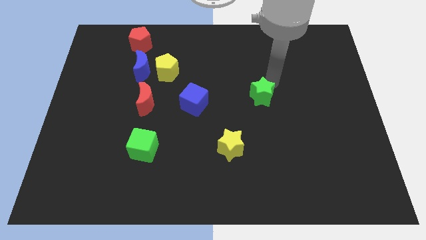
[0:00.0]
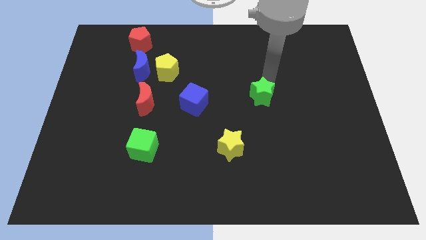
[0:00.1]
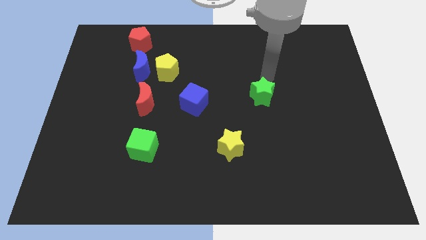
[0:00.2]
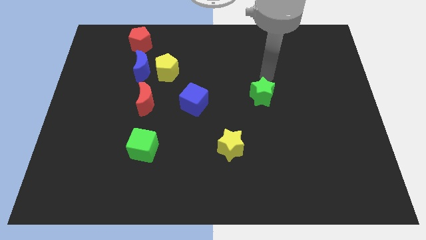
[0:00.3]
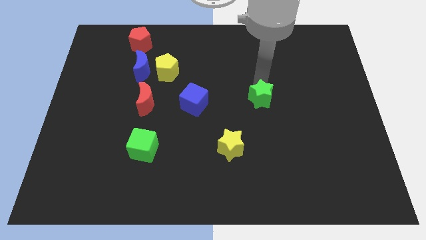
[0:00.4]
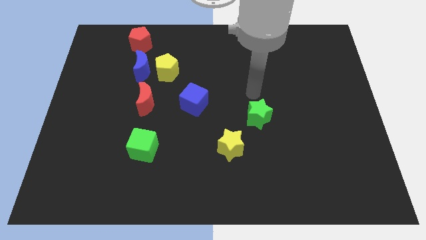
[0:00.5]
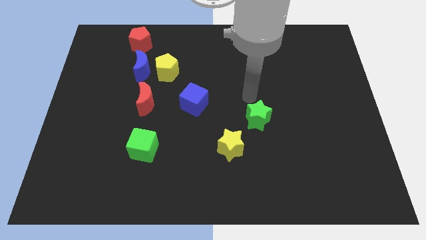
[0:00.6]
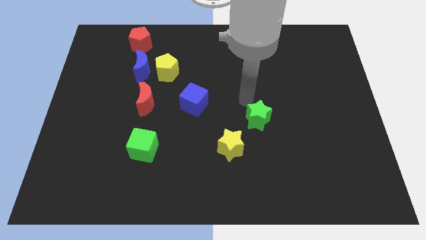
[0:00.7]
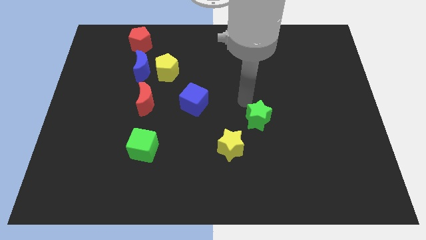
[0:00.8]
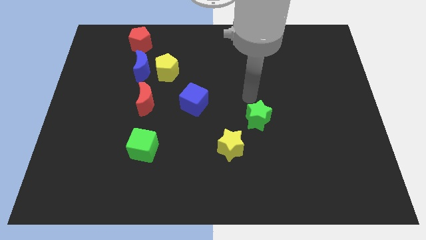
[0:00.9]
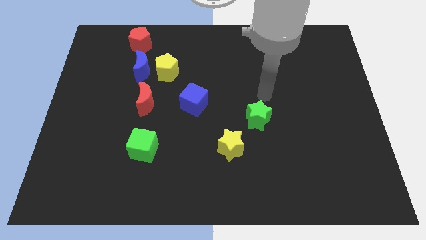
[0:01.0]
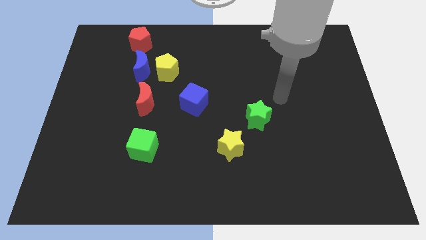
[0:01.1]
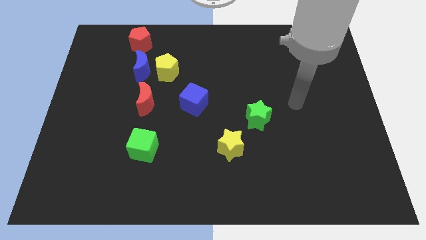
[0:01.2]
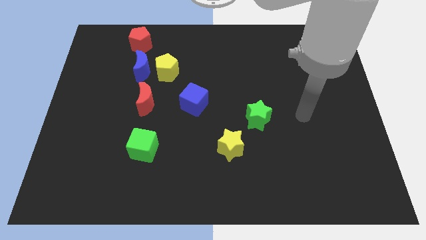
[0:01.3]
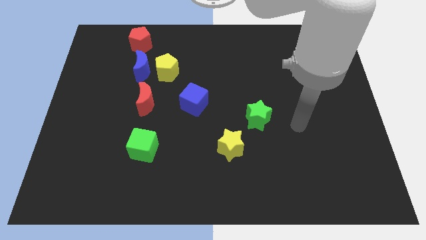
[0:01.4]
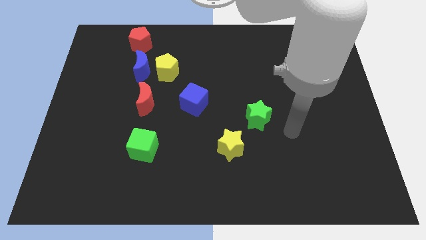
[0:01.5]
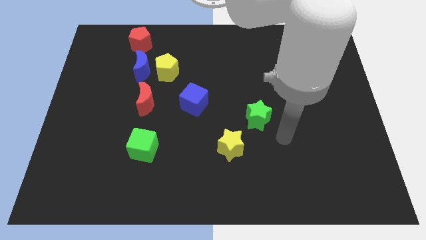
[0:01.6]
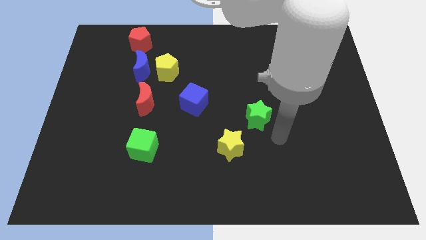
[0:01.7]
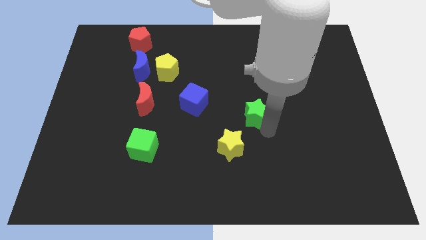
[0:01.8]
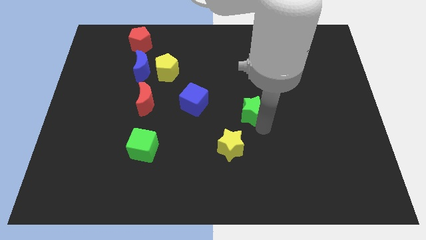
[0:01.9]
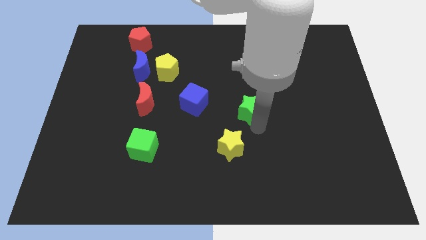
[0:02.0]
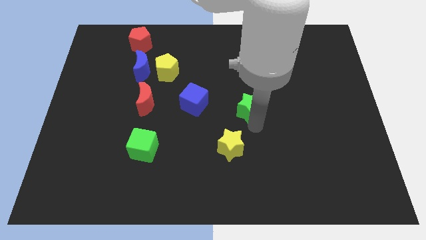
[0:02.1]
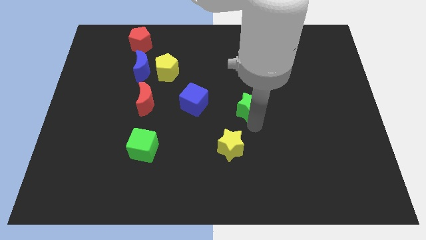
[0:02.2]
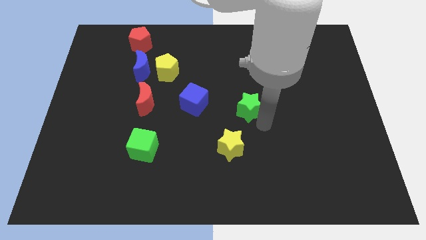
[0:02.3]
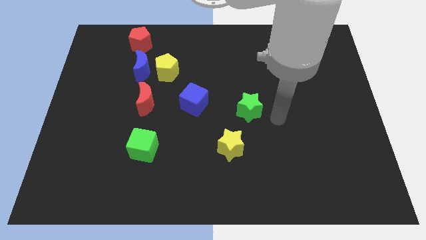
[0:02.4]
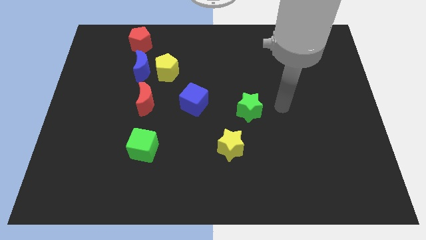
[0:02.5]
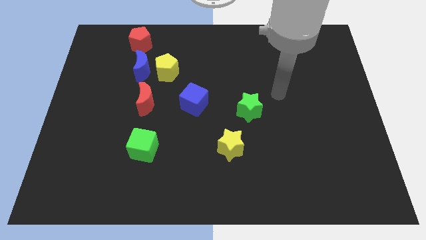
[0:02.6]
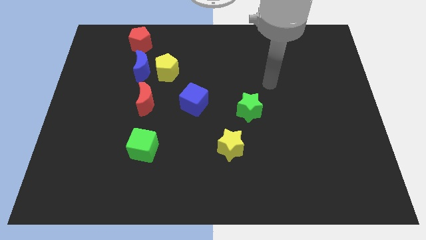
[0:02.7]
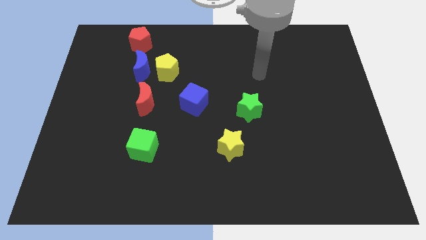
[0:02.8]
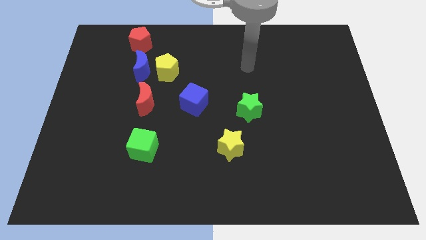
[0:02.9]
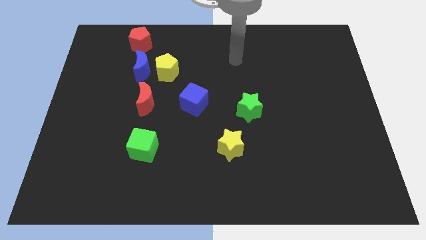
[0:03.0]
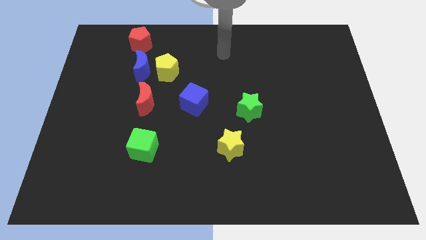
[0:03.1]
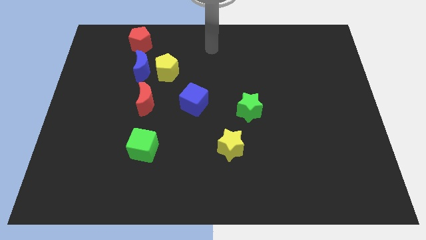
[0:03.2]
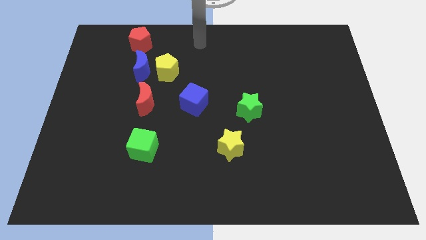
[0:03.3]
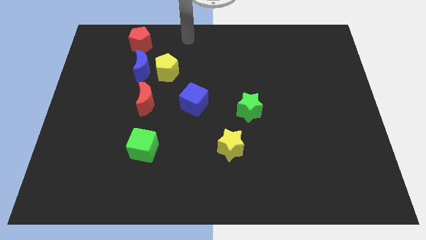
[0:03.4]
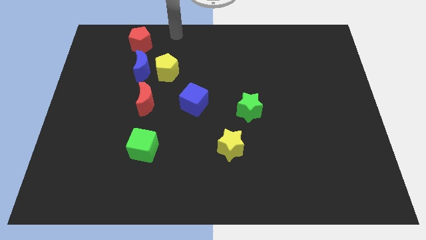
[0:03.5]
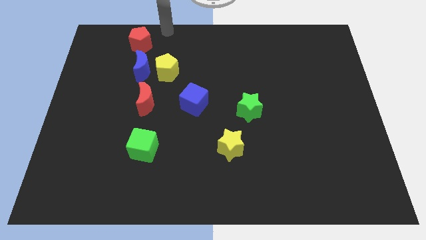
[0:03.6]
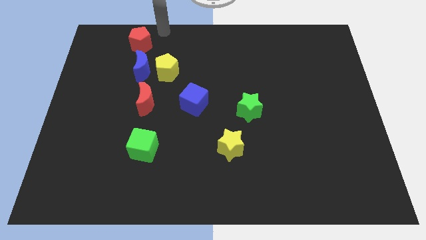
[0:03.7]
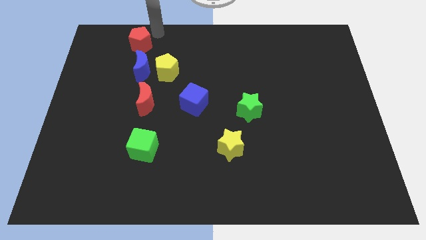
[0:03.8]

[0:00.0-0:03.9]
place the green star diagonal to the yellow star

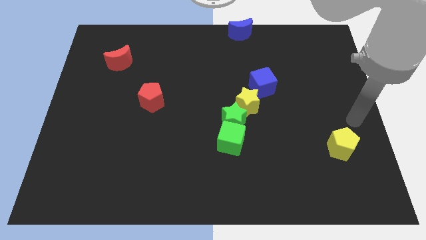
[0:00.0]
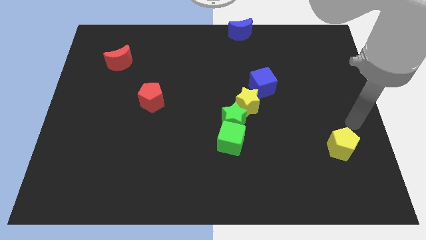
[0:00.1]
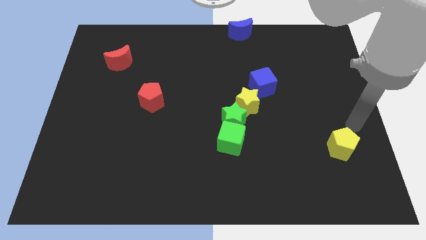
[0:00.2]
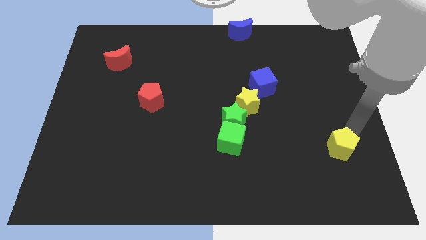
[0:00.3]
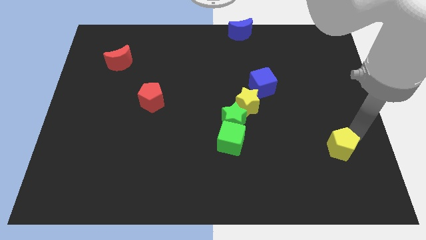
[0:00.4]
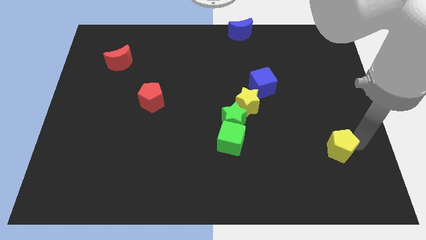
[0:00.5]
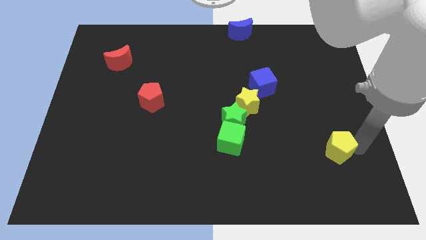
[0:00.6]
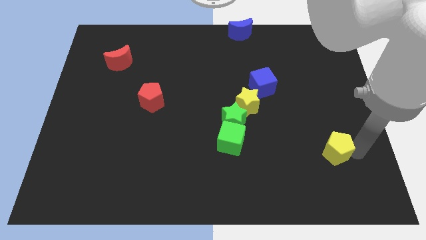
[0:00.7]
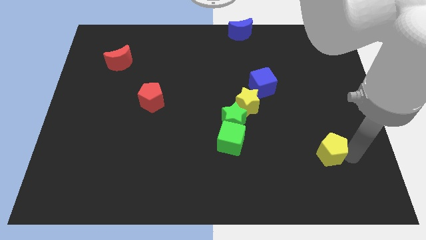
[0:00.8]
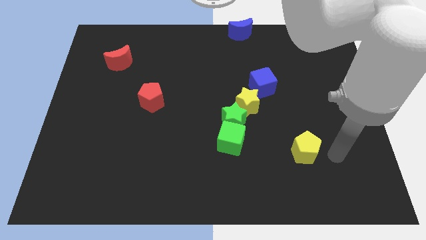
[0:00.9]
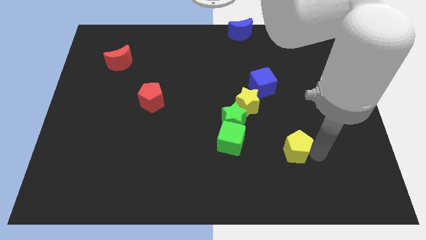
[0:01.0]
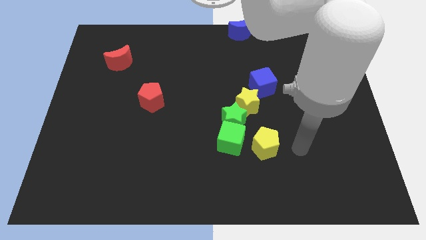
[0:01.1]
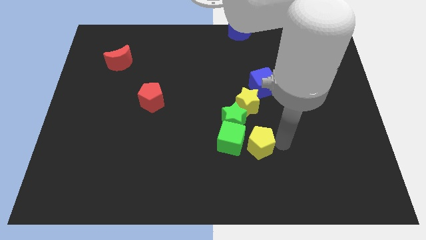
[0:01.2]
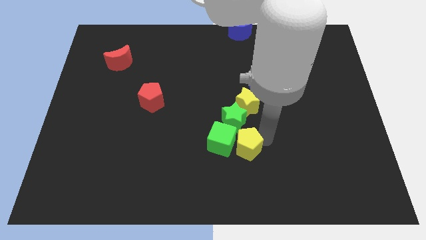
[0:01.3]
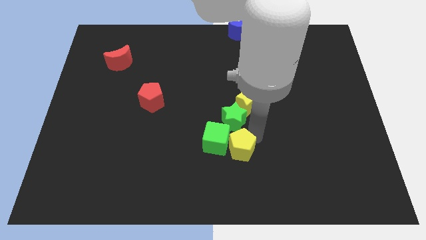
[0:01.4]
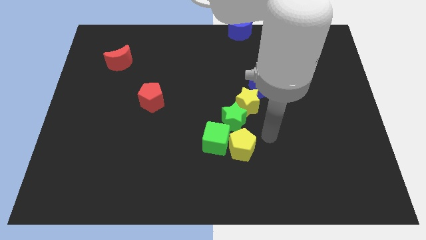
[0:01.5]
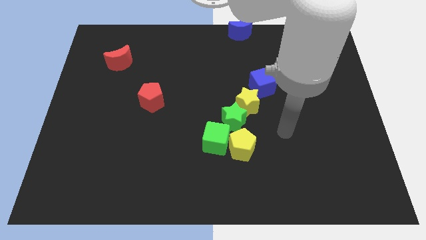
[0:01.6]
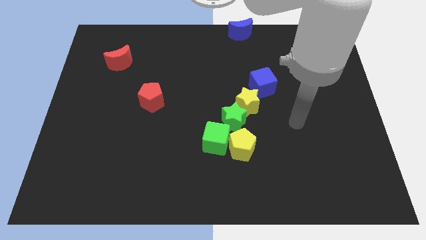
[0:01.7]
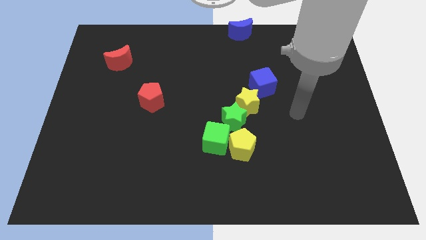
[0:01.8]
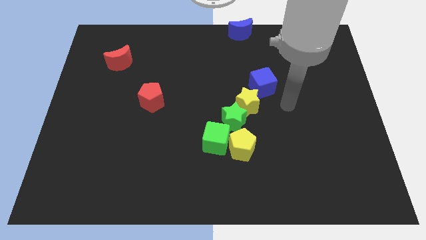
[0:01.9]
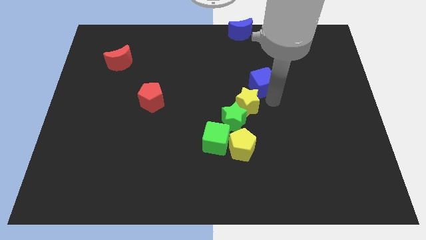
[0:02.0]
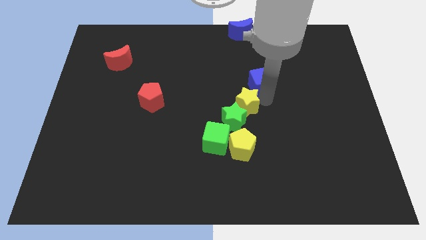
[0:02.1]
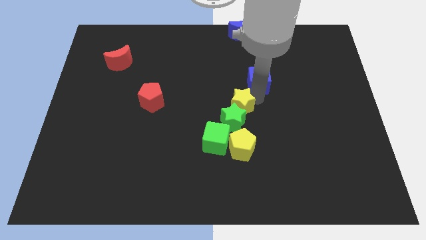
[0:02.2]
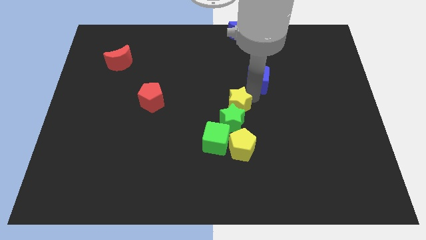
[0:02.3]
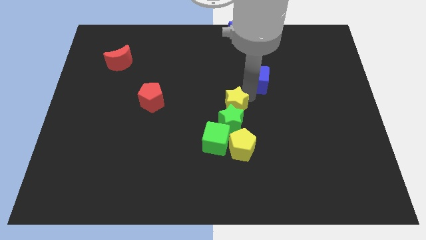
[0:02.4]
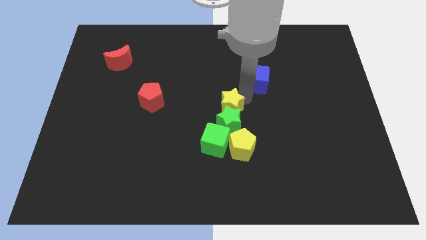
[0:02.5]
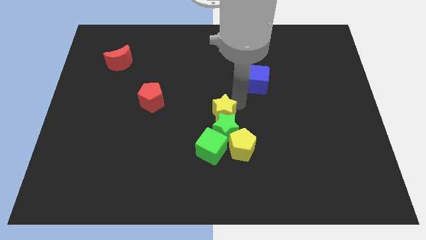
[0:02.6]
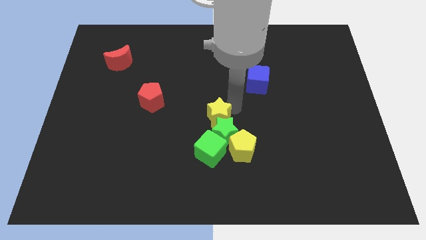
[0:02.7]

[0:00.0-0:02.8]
push the yellow pentagon and yellow star in to the green blocks

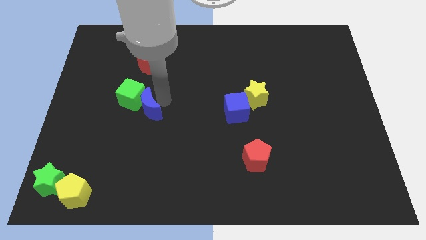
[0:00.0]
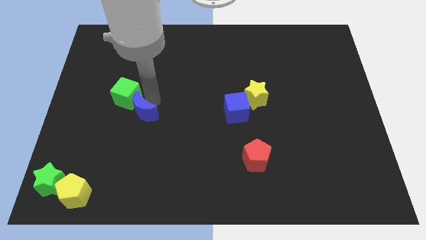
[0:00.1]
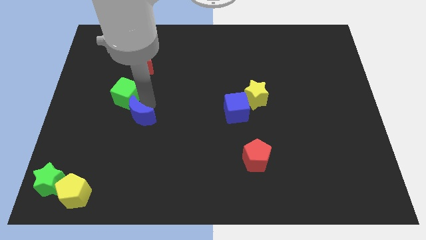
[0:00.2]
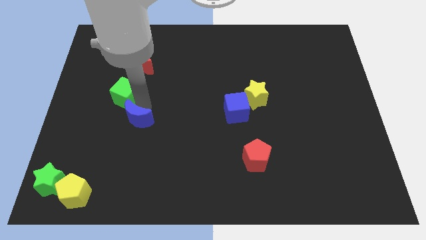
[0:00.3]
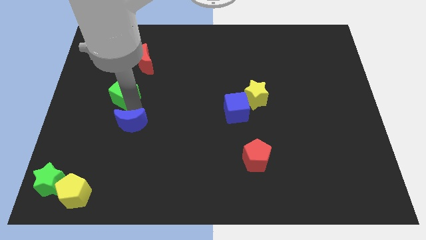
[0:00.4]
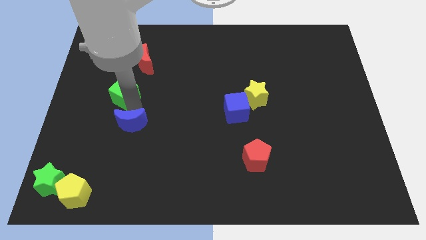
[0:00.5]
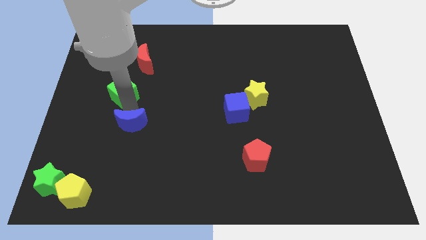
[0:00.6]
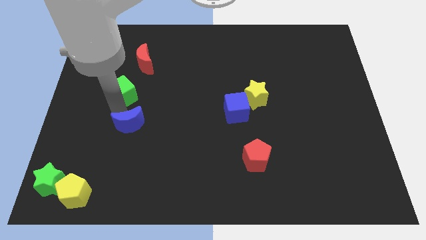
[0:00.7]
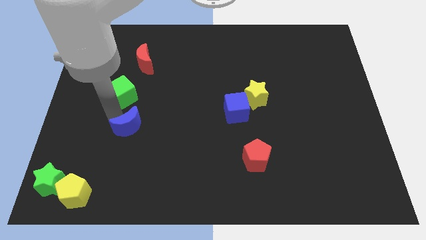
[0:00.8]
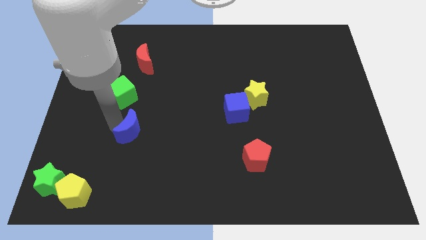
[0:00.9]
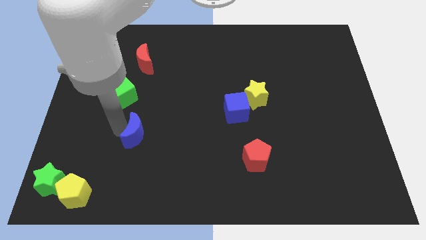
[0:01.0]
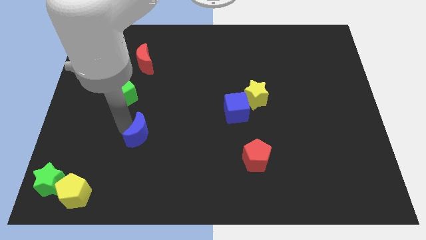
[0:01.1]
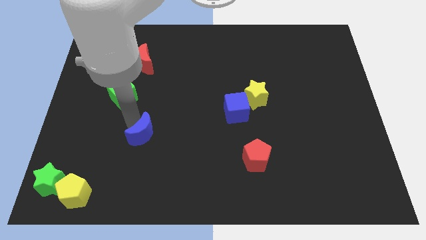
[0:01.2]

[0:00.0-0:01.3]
separate the blue crescent away from the green cube

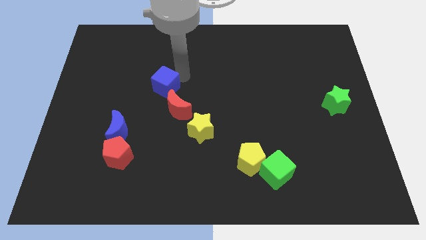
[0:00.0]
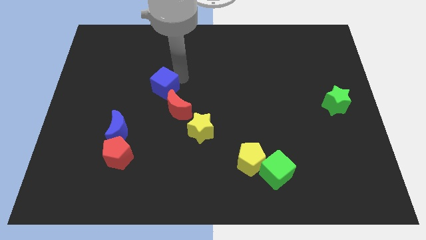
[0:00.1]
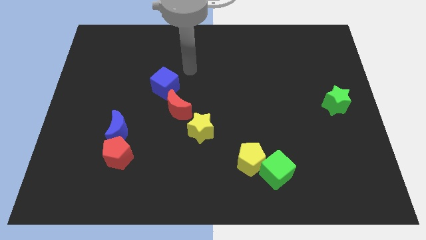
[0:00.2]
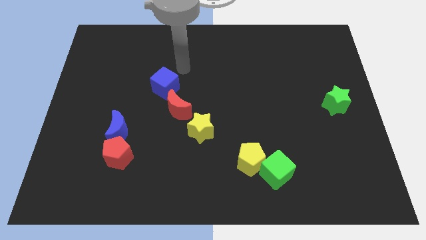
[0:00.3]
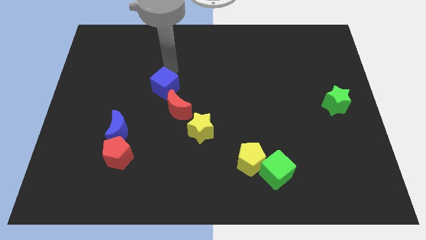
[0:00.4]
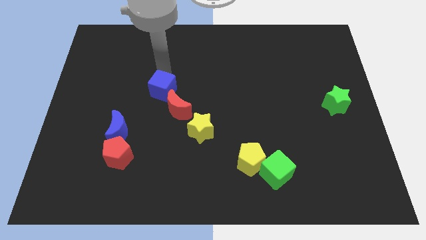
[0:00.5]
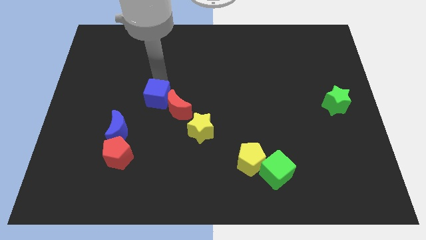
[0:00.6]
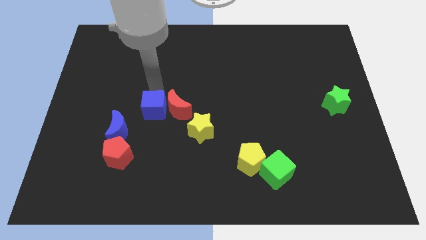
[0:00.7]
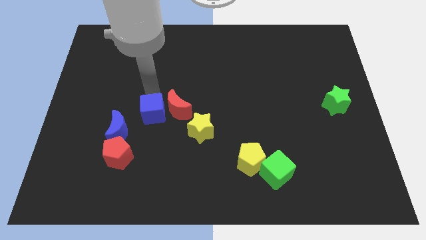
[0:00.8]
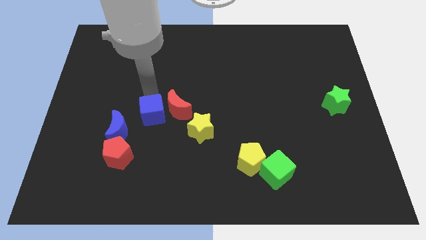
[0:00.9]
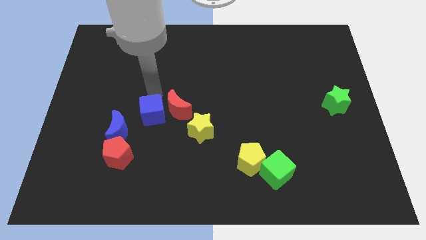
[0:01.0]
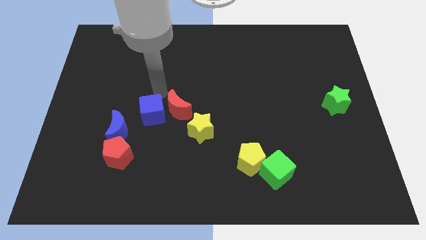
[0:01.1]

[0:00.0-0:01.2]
place the blue cube to the left side of the red crescent
